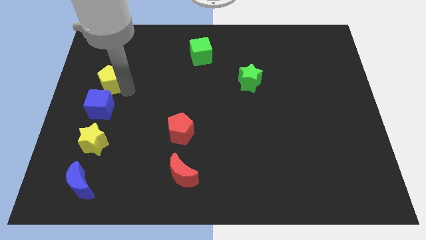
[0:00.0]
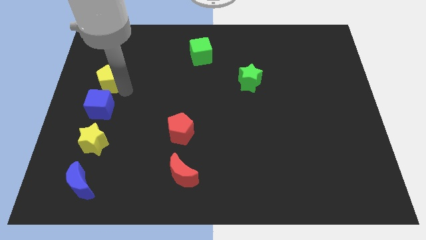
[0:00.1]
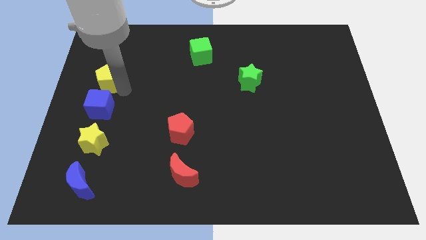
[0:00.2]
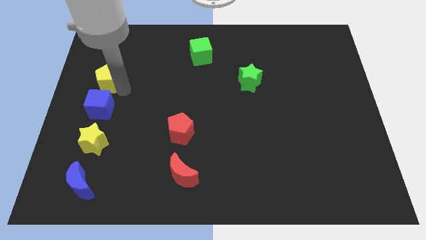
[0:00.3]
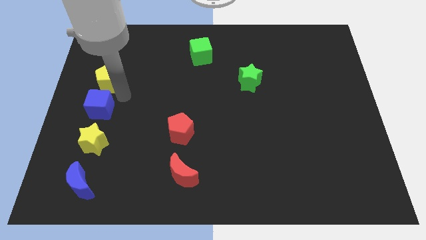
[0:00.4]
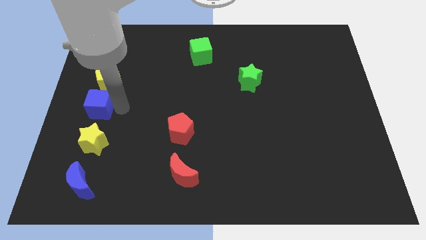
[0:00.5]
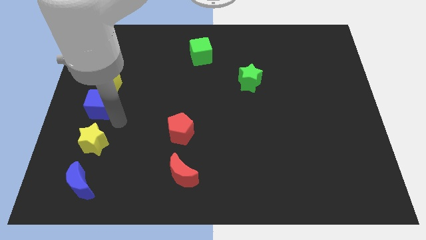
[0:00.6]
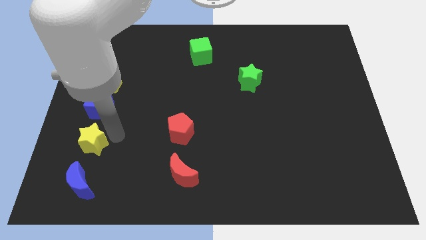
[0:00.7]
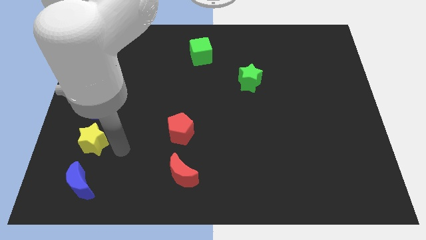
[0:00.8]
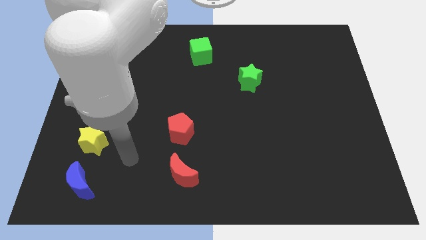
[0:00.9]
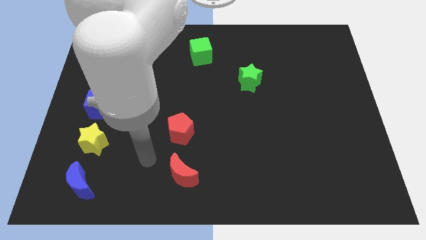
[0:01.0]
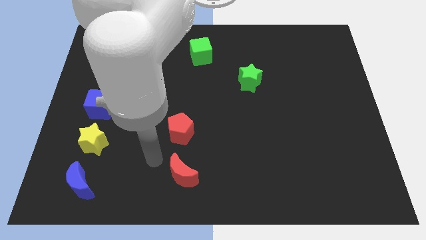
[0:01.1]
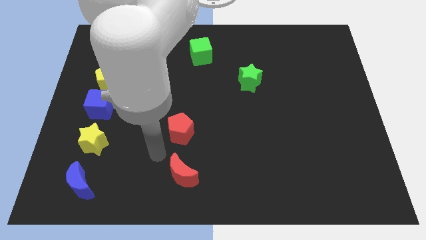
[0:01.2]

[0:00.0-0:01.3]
drag the yellow pentagon to the left

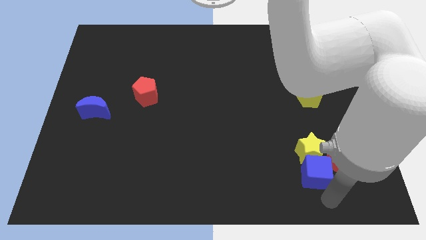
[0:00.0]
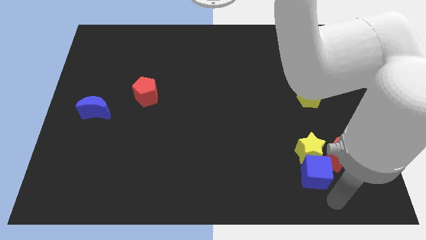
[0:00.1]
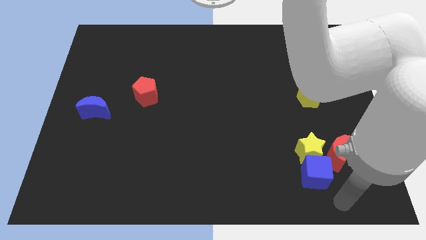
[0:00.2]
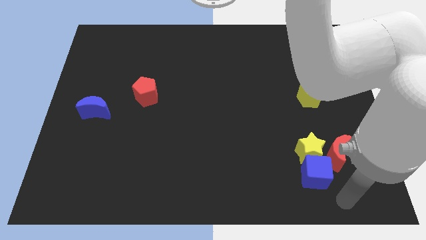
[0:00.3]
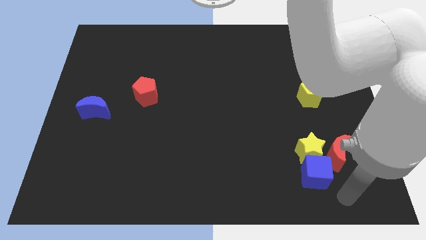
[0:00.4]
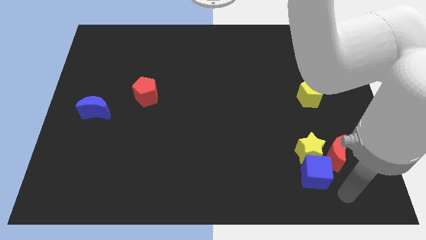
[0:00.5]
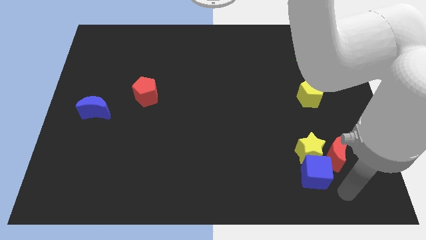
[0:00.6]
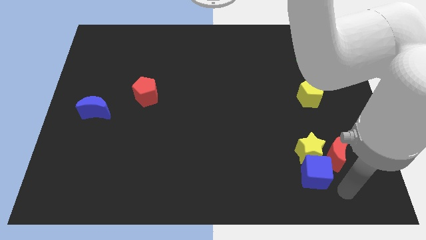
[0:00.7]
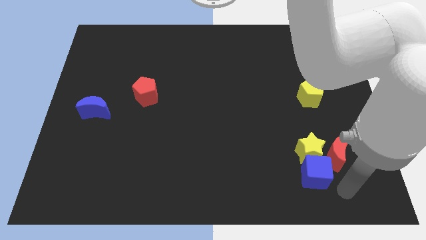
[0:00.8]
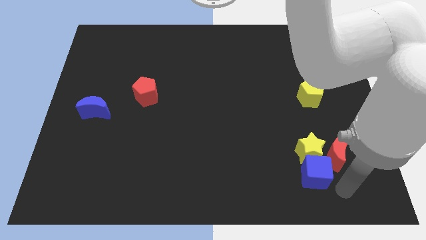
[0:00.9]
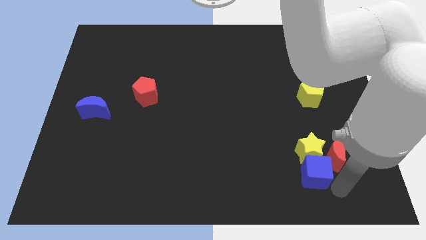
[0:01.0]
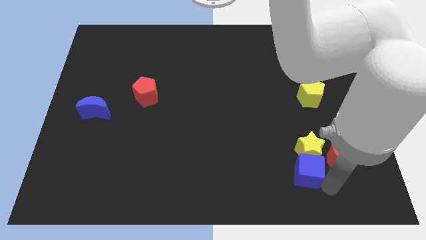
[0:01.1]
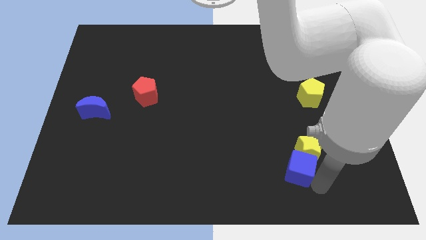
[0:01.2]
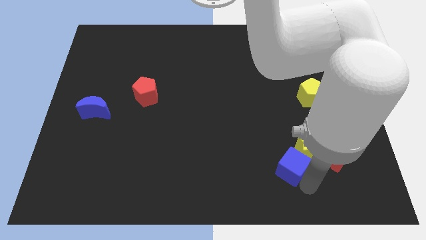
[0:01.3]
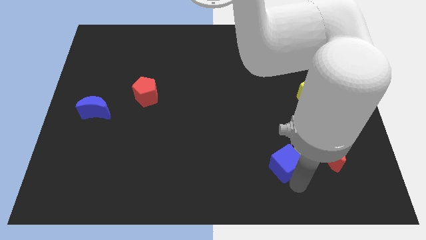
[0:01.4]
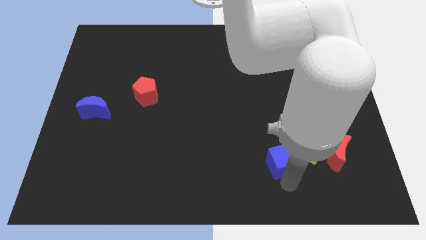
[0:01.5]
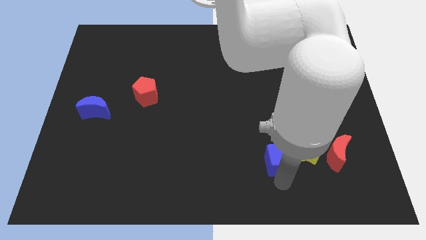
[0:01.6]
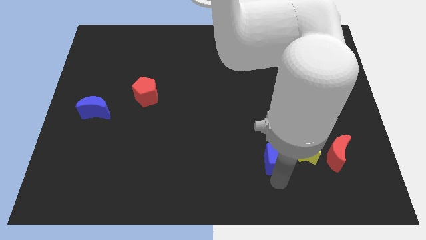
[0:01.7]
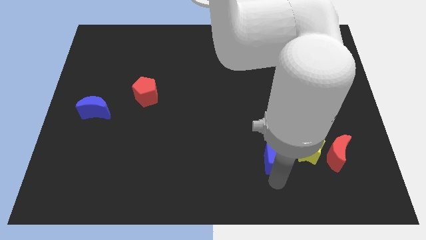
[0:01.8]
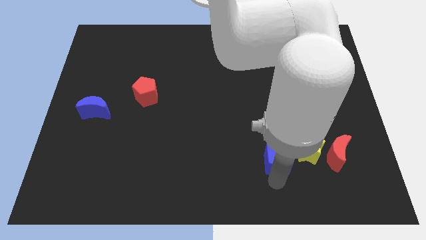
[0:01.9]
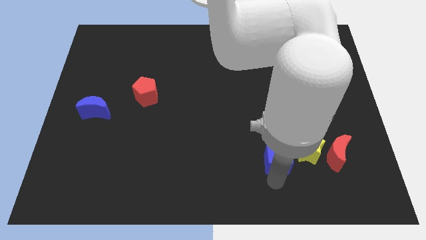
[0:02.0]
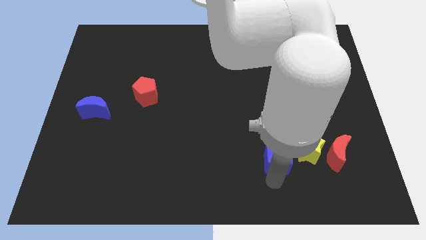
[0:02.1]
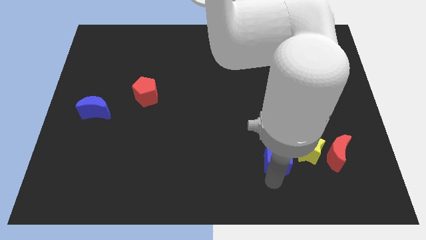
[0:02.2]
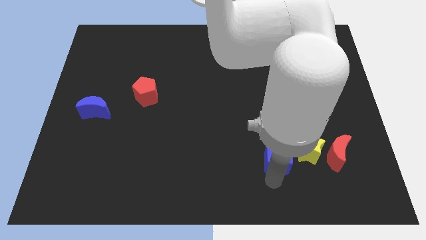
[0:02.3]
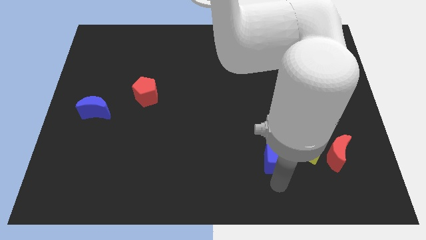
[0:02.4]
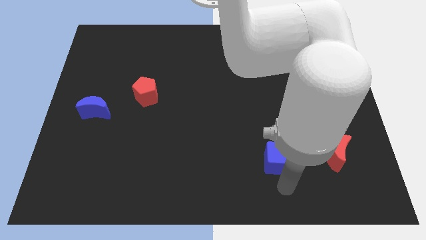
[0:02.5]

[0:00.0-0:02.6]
slightly move the blue cube to the left

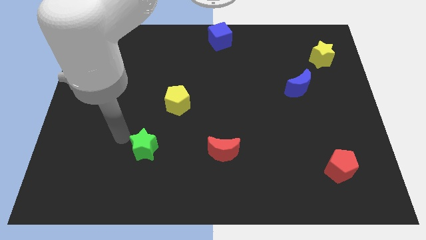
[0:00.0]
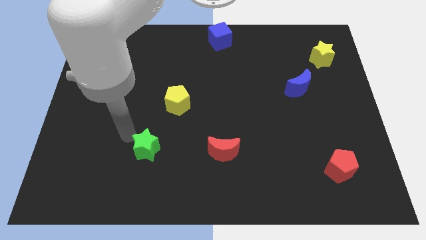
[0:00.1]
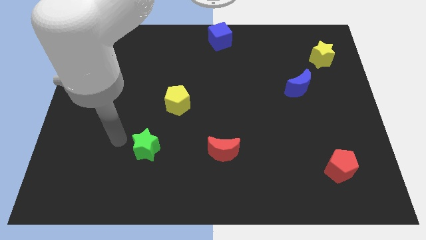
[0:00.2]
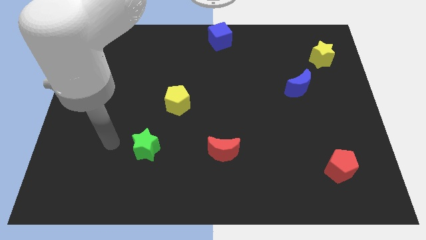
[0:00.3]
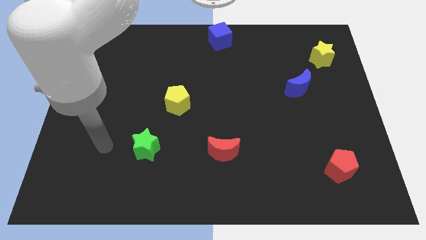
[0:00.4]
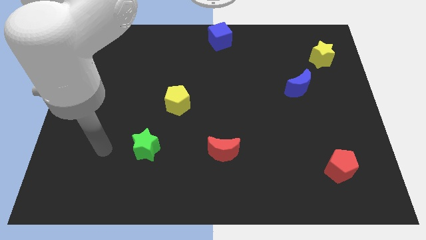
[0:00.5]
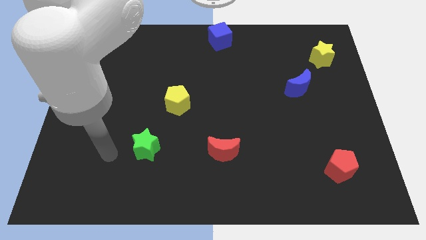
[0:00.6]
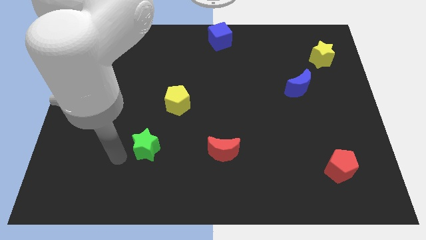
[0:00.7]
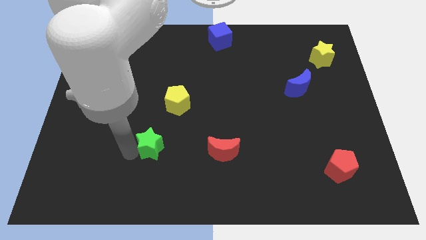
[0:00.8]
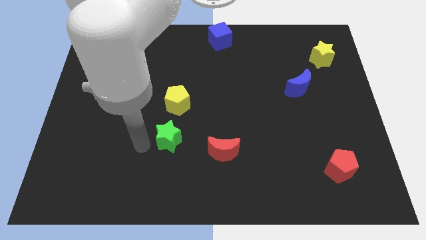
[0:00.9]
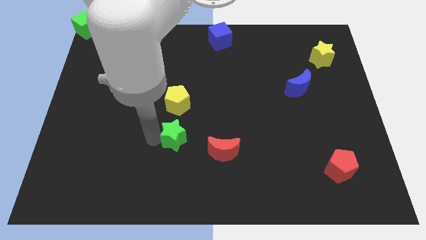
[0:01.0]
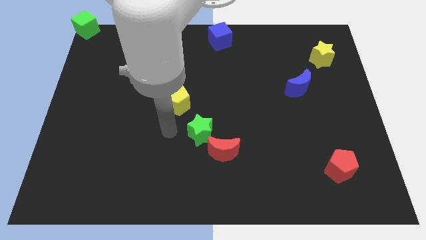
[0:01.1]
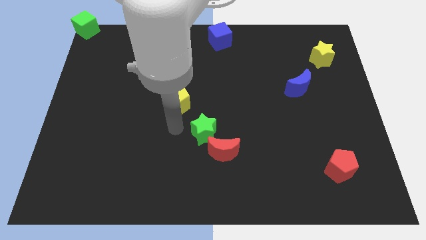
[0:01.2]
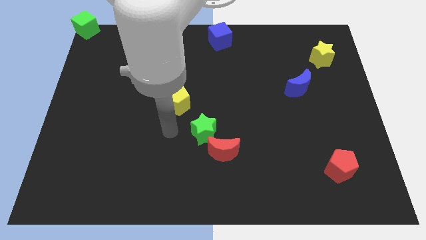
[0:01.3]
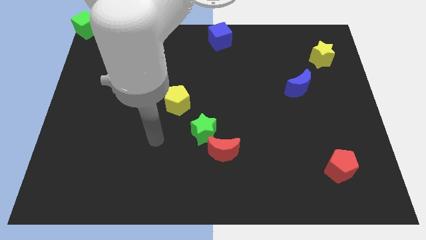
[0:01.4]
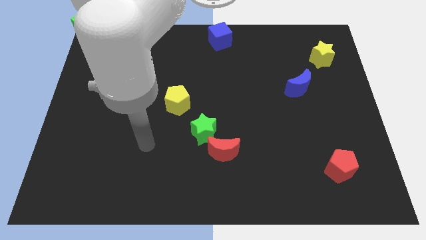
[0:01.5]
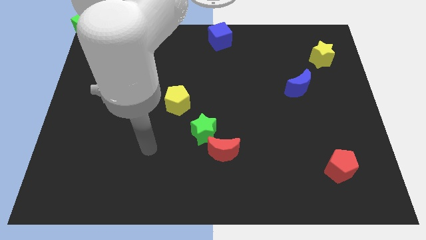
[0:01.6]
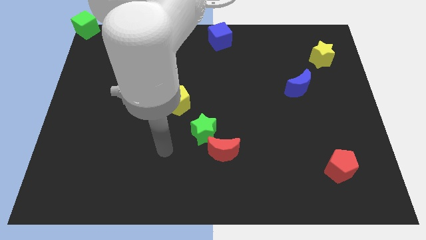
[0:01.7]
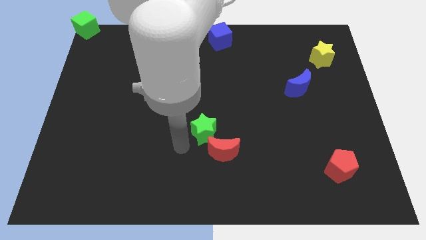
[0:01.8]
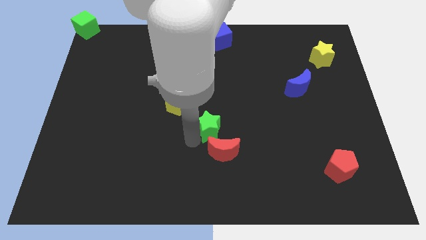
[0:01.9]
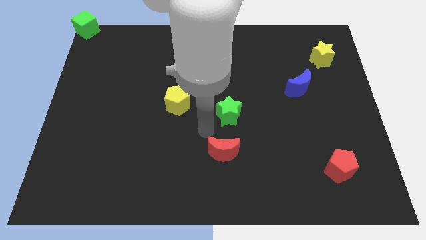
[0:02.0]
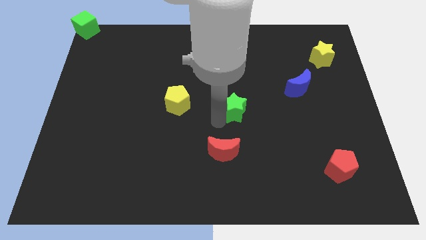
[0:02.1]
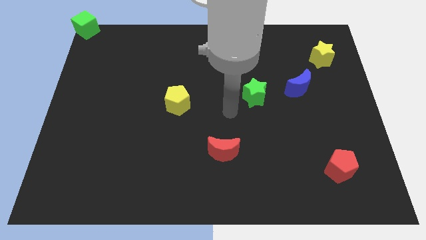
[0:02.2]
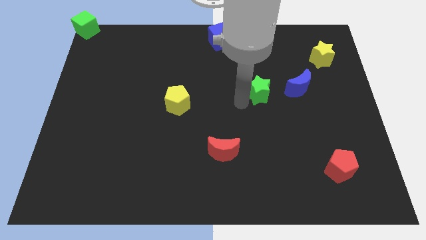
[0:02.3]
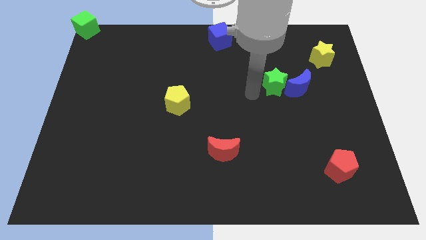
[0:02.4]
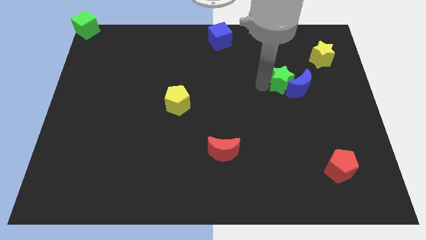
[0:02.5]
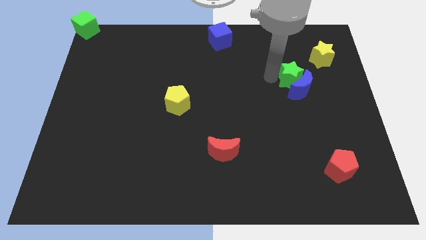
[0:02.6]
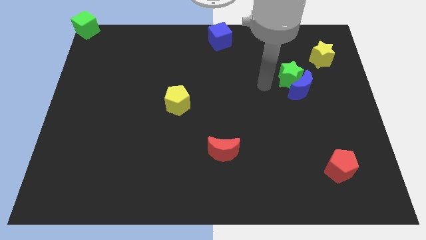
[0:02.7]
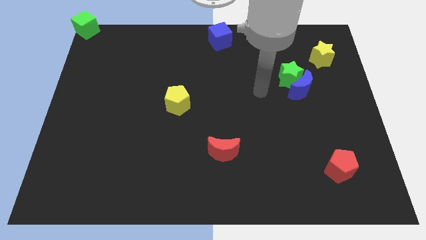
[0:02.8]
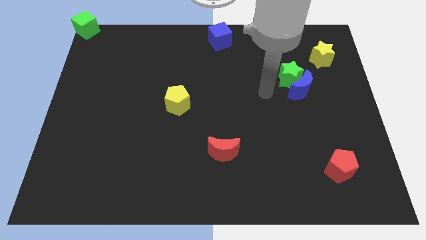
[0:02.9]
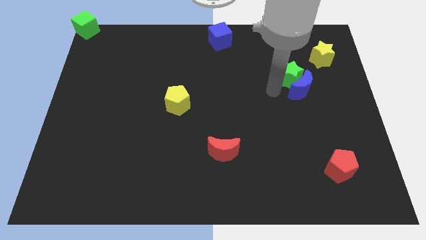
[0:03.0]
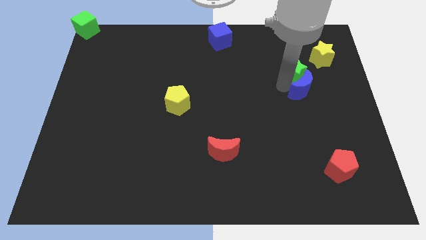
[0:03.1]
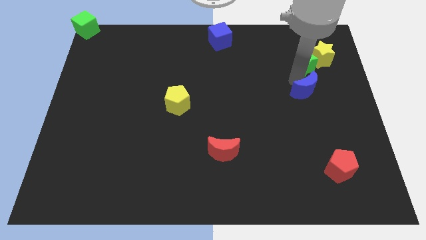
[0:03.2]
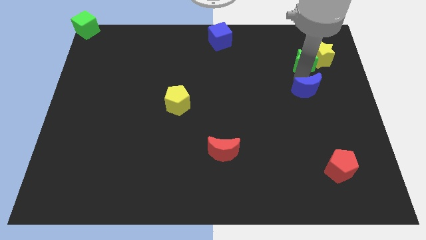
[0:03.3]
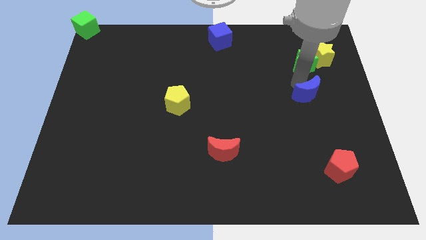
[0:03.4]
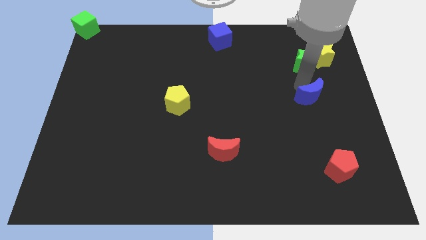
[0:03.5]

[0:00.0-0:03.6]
push the green star into the yellow star

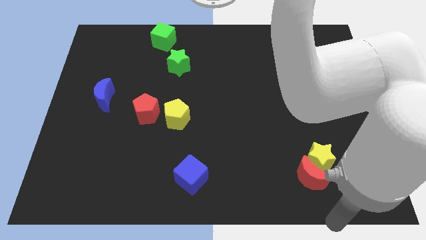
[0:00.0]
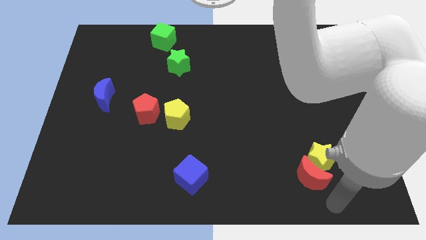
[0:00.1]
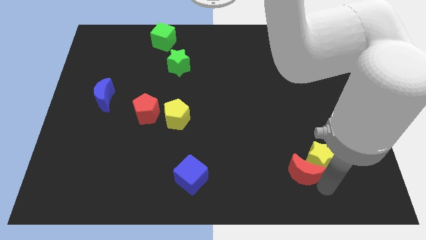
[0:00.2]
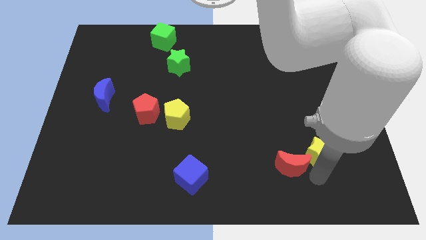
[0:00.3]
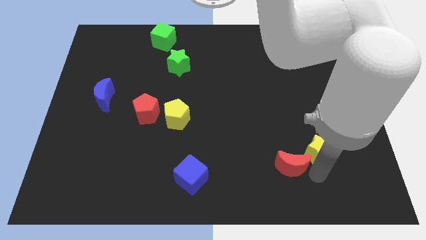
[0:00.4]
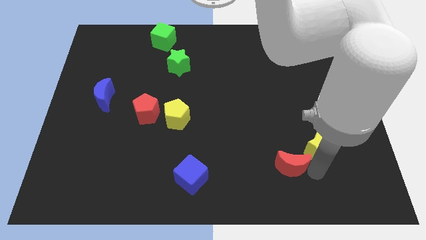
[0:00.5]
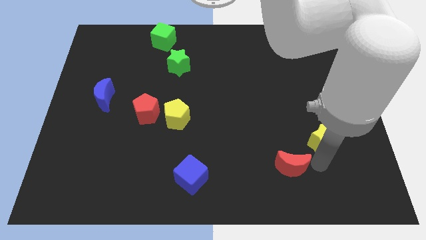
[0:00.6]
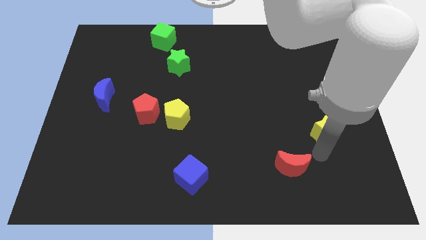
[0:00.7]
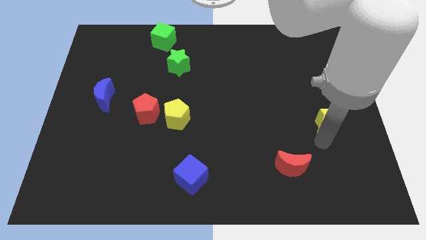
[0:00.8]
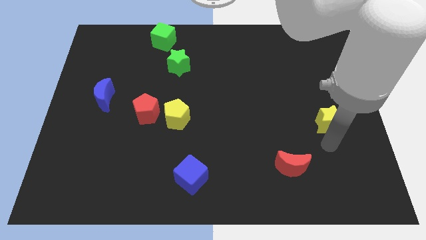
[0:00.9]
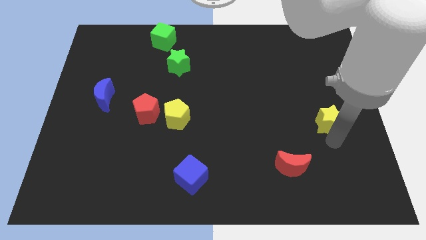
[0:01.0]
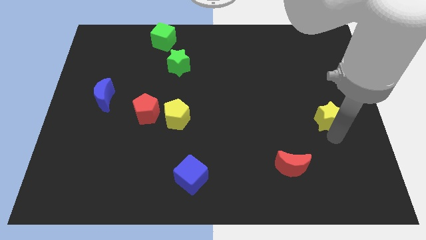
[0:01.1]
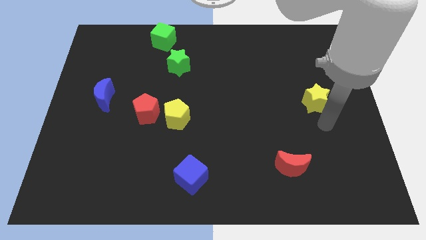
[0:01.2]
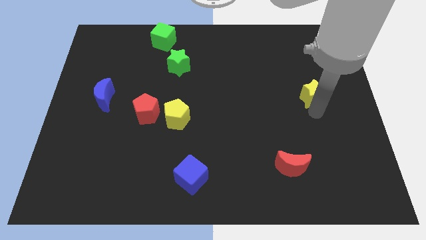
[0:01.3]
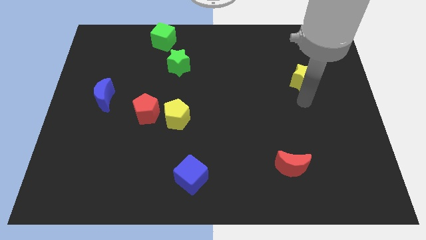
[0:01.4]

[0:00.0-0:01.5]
move the yellow star away from the red crescent
